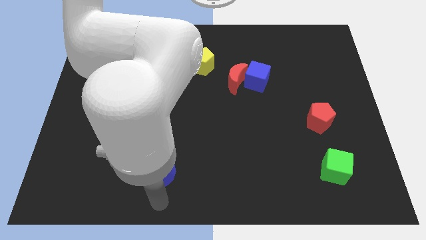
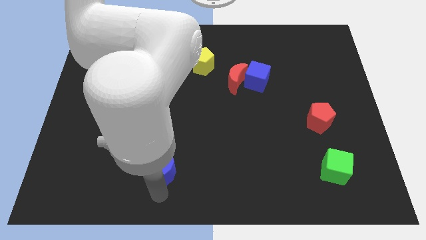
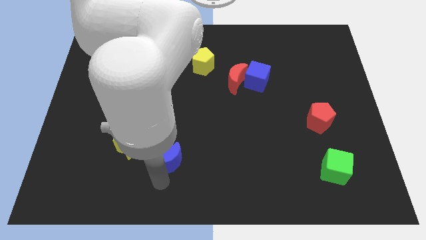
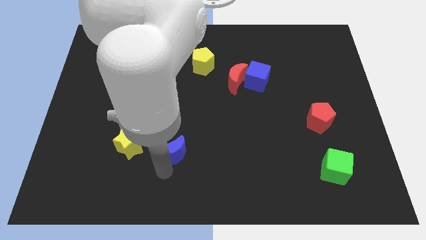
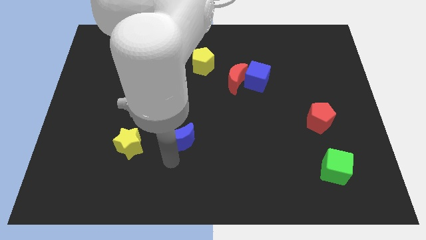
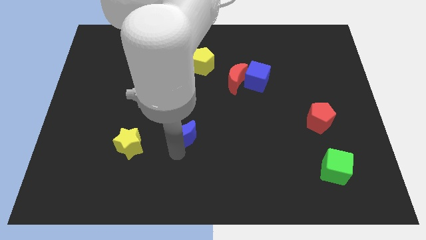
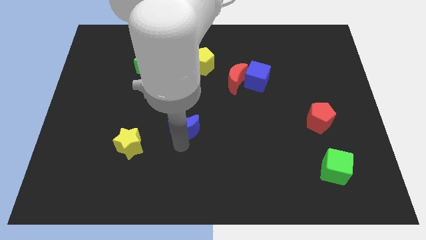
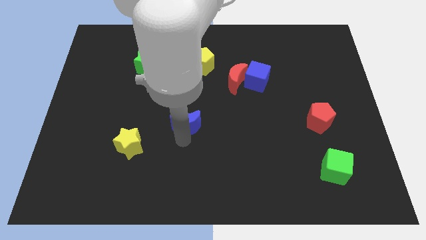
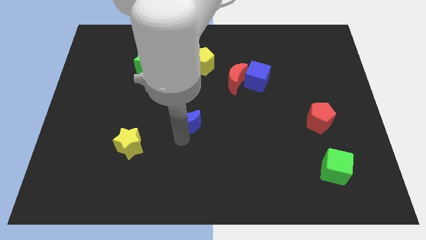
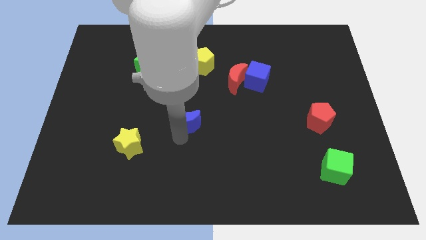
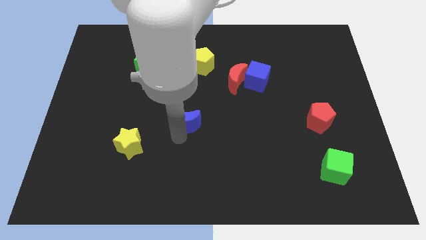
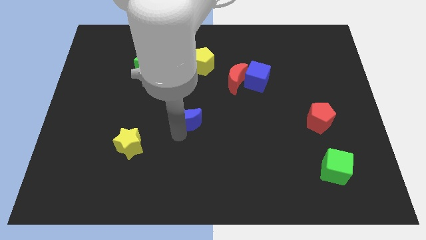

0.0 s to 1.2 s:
slide the blue crescent slightly towards up

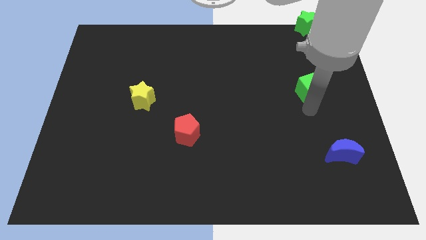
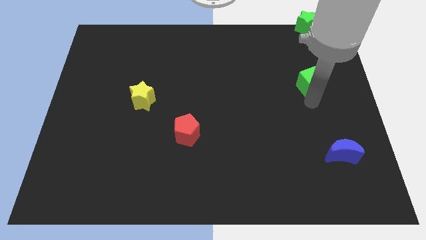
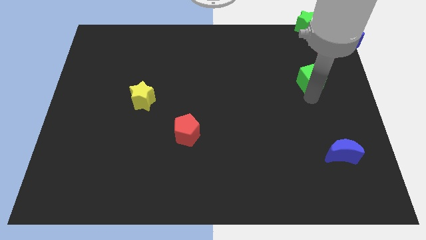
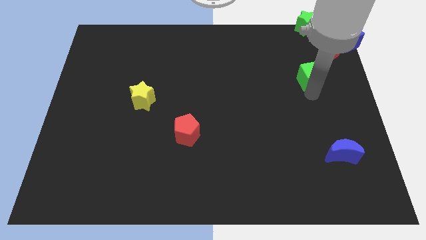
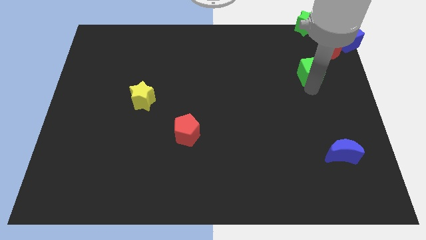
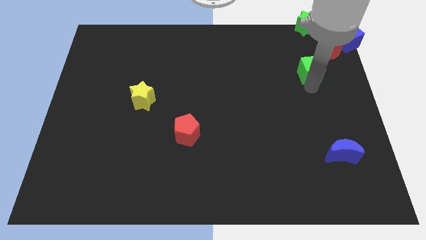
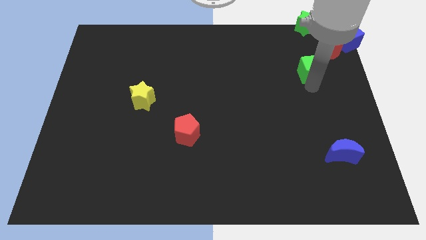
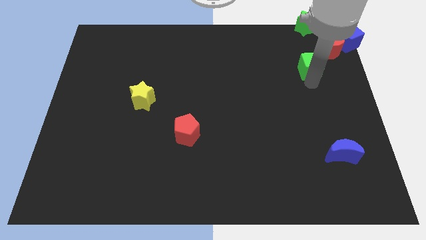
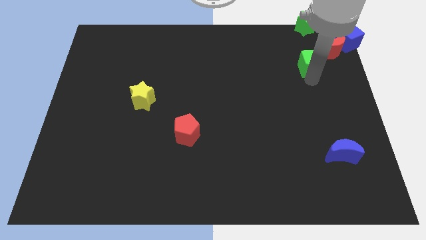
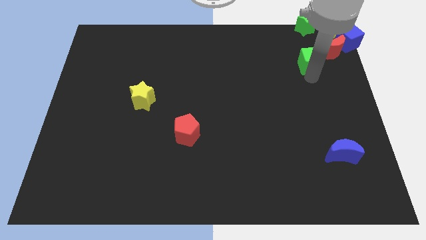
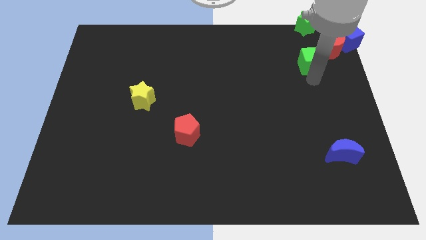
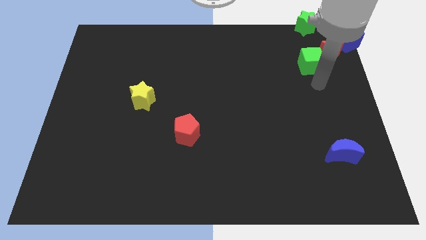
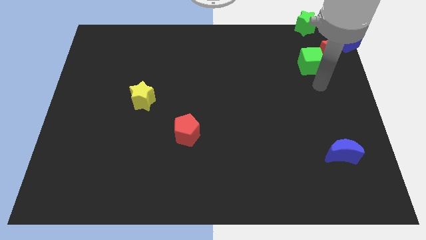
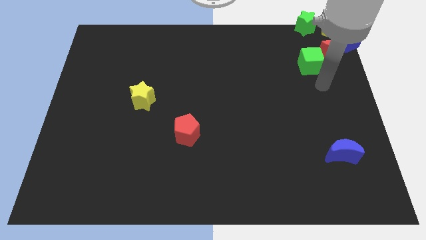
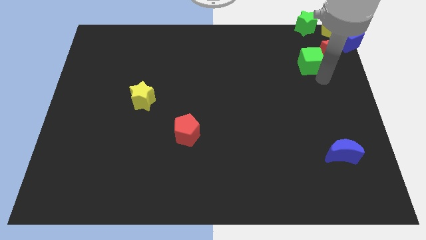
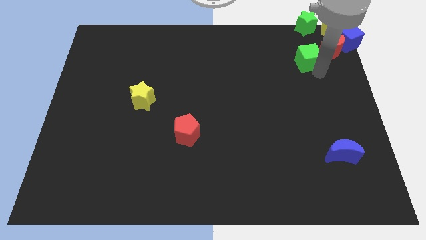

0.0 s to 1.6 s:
push the green cube slightly to the top

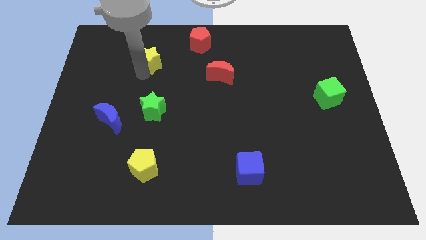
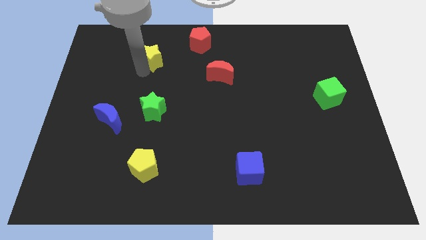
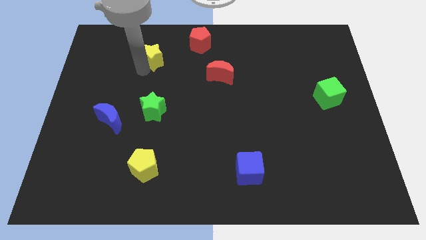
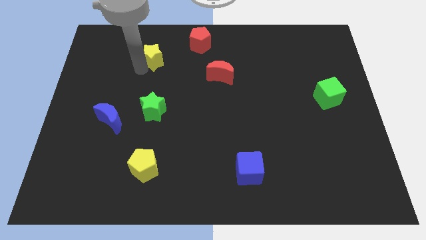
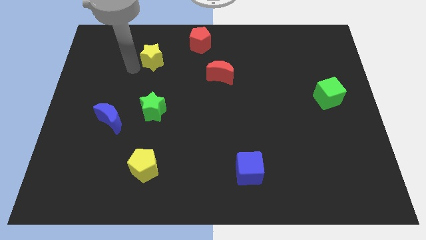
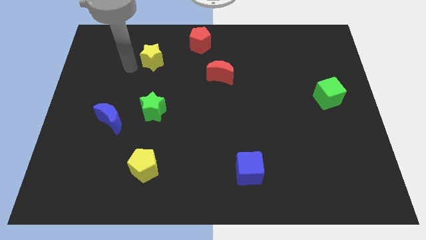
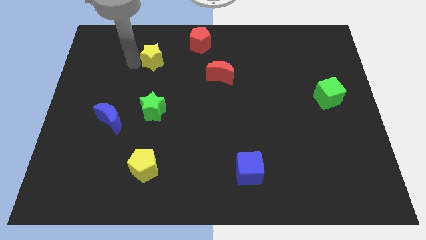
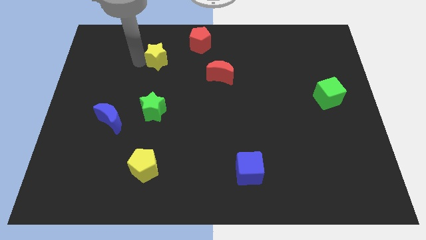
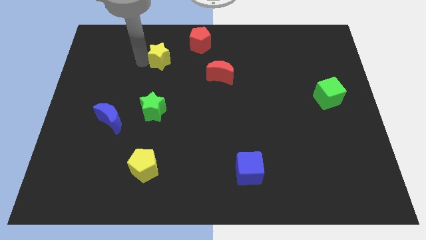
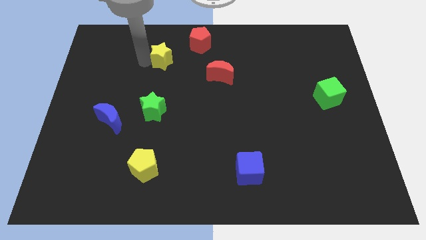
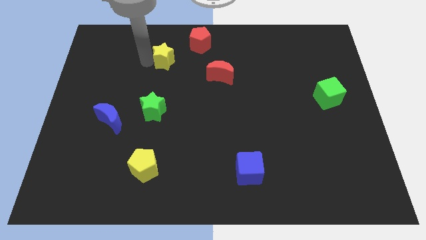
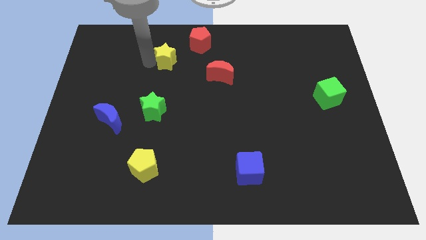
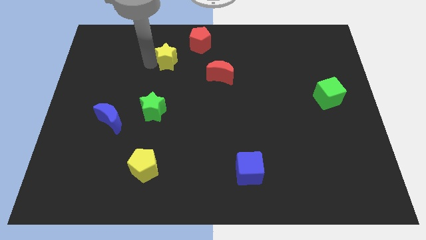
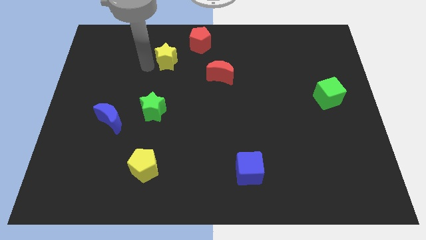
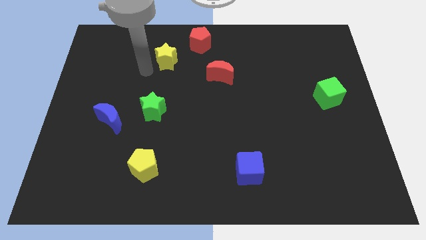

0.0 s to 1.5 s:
move the yellow star parallel to the green star

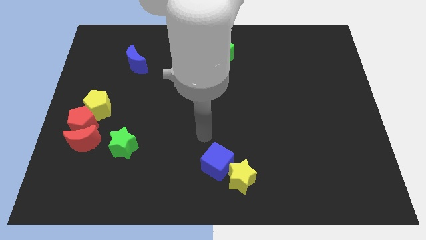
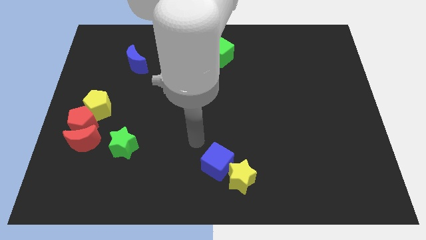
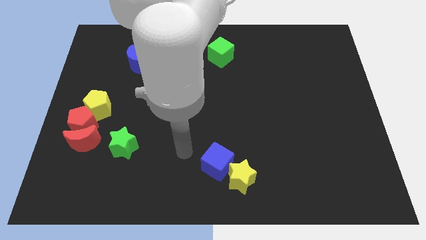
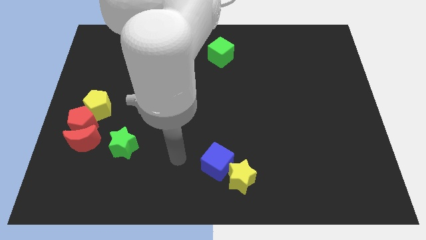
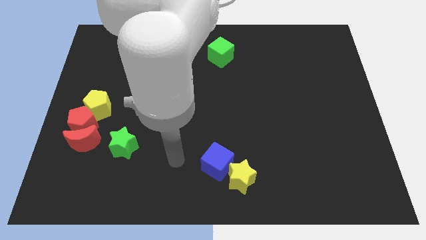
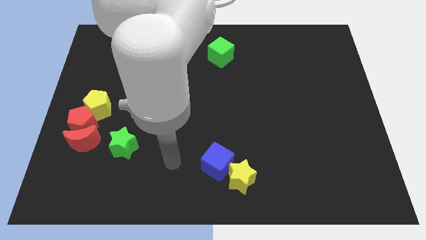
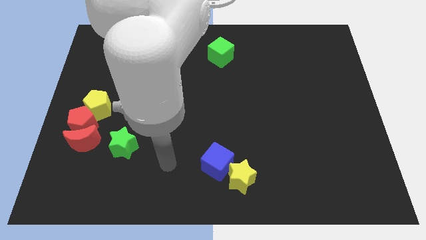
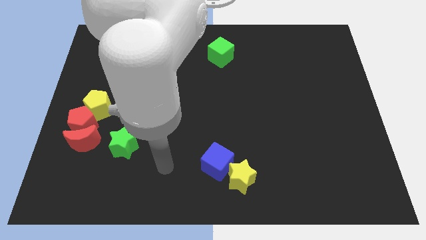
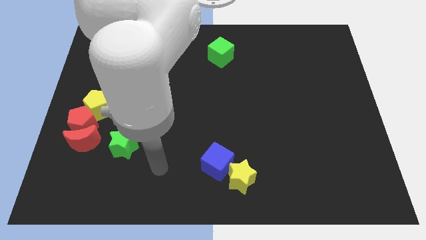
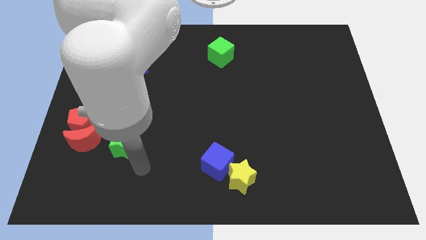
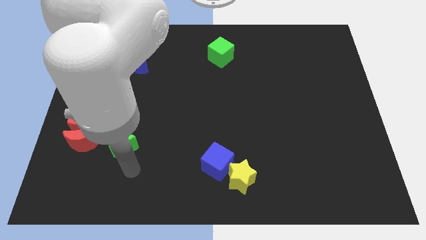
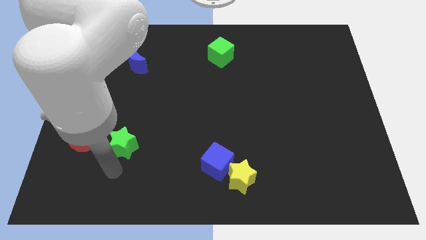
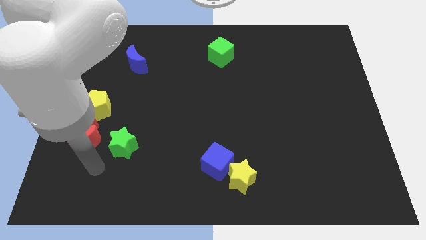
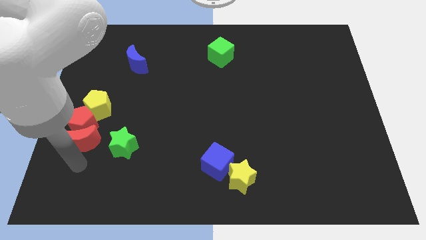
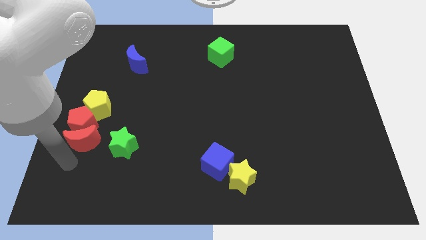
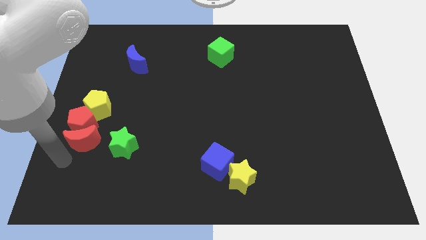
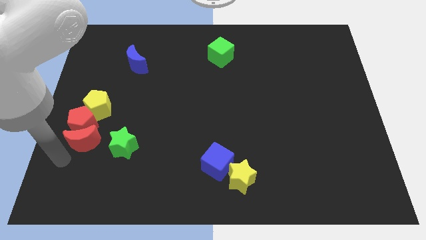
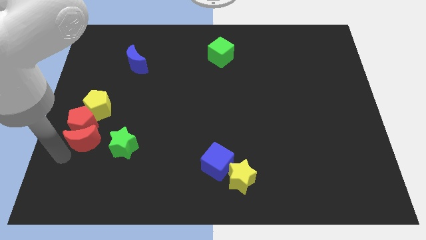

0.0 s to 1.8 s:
point your arm below red moon

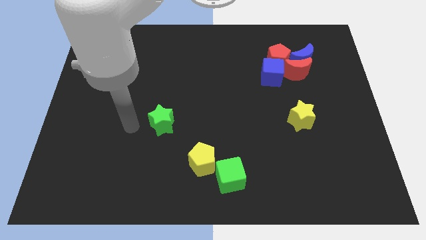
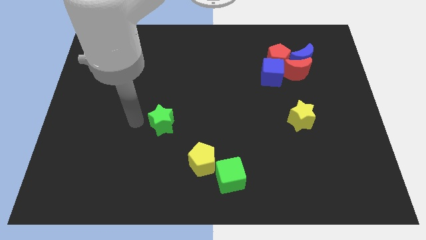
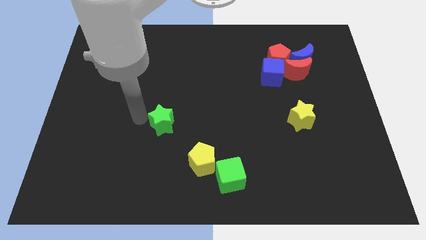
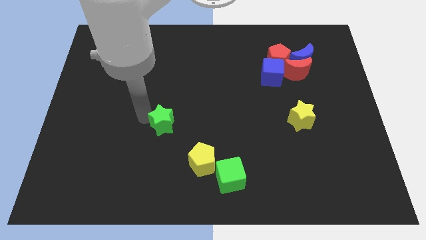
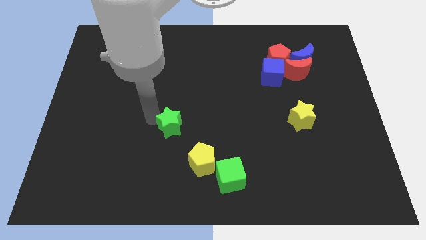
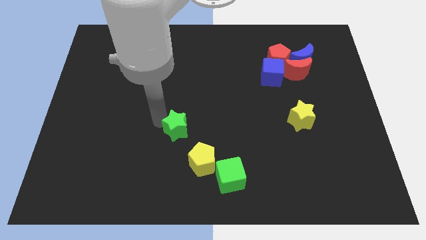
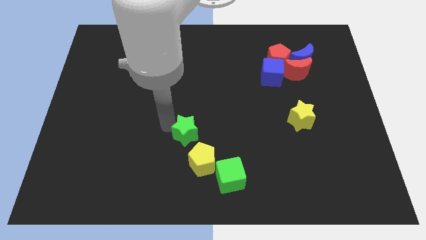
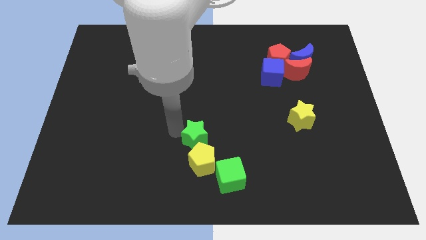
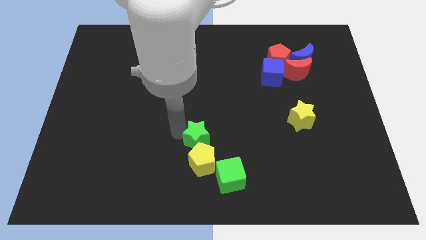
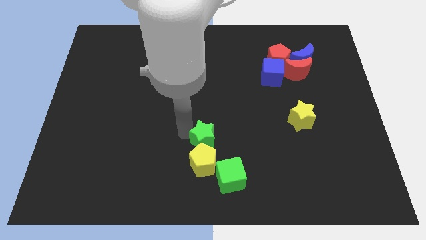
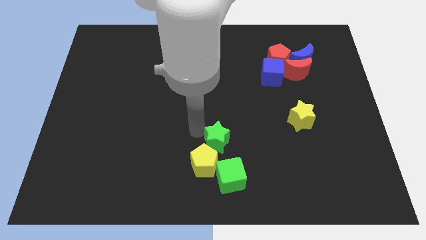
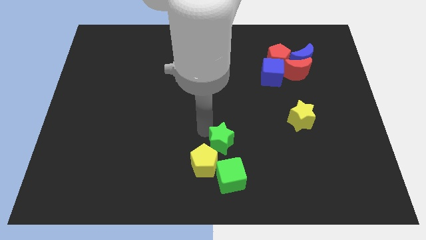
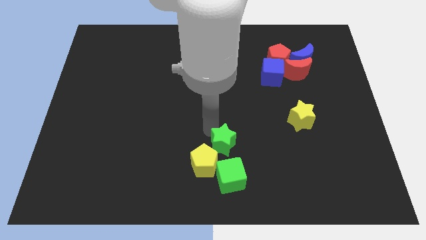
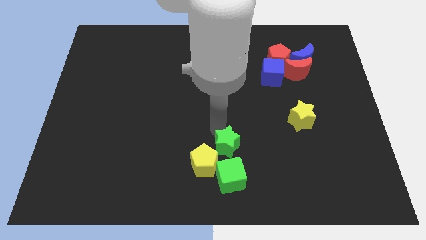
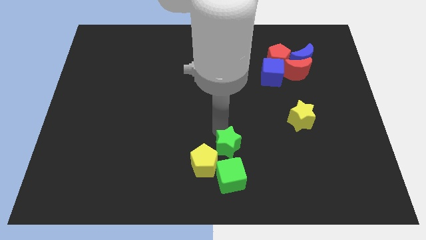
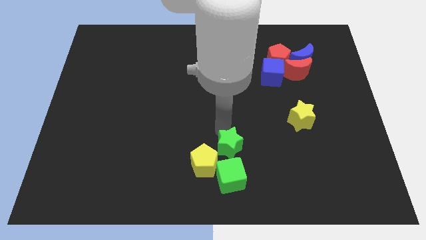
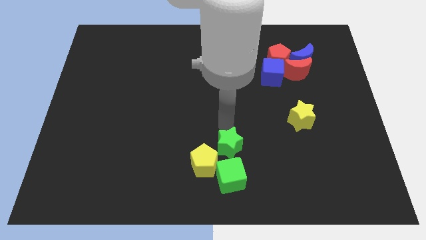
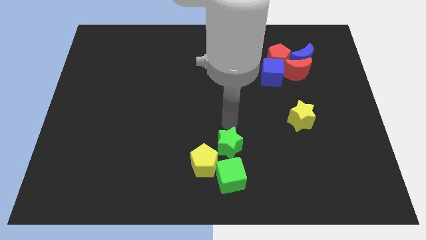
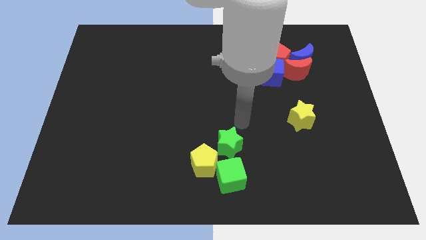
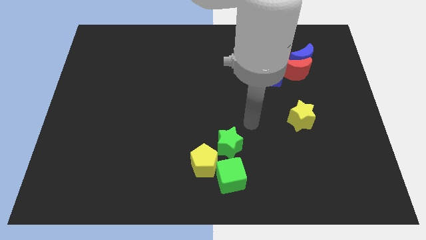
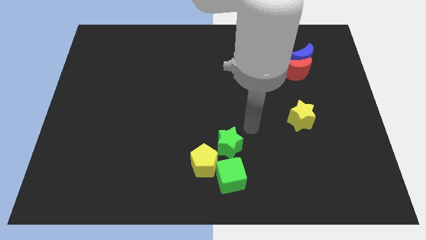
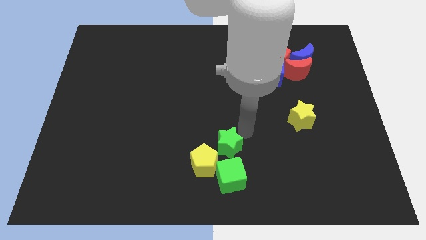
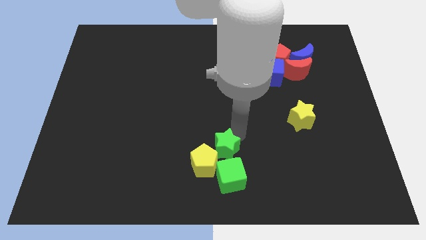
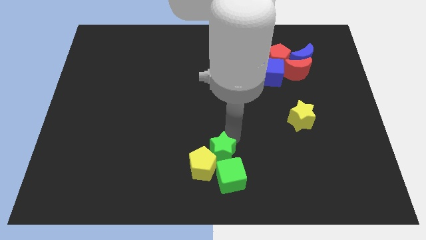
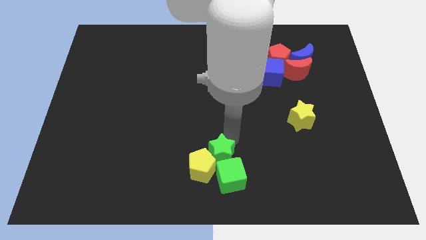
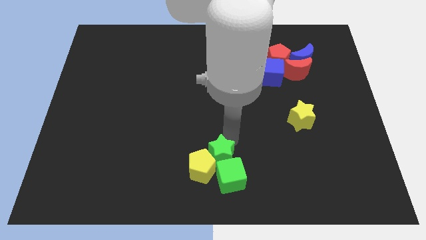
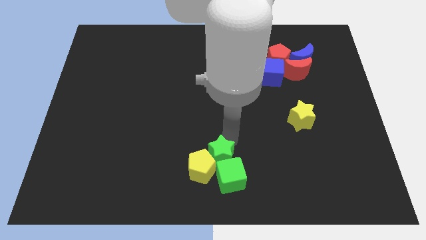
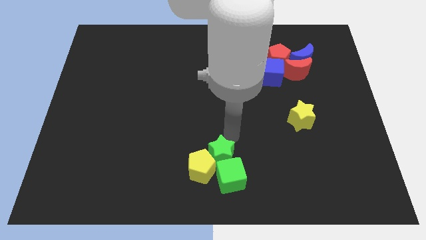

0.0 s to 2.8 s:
place green star to the top of the green cube

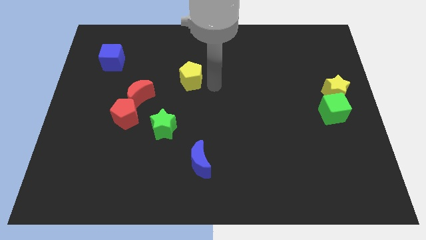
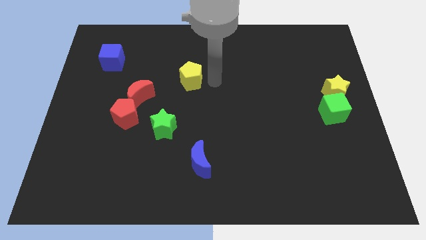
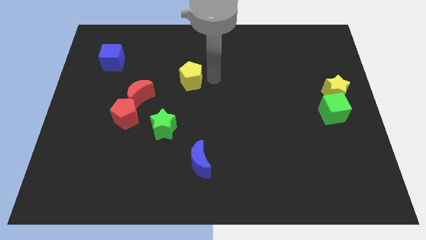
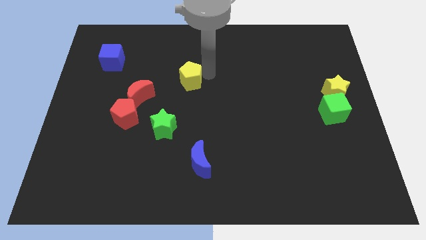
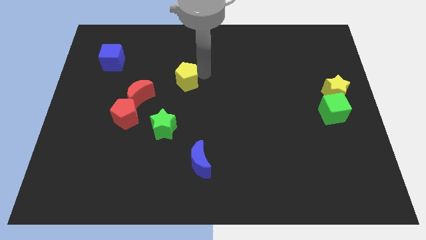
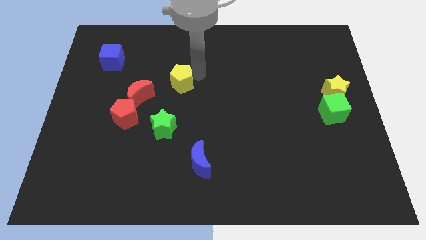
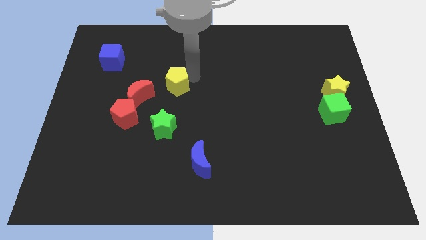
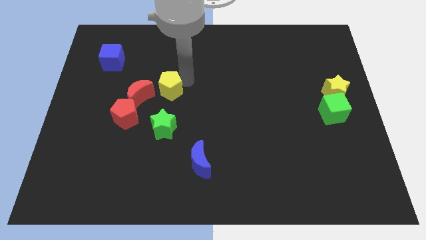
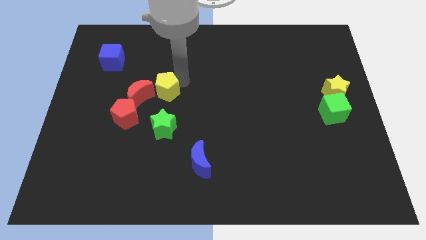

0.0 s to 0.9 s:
put the yellow pentagon to the right side of red crescent
